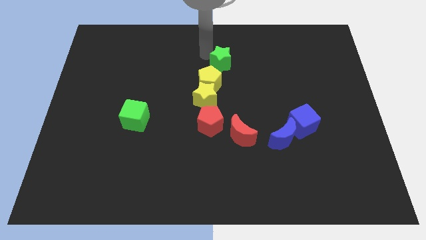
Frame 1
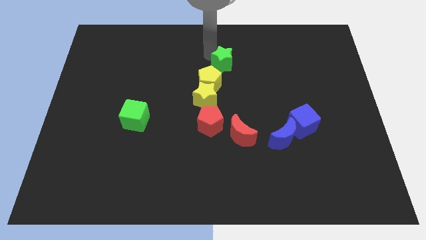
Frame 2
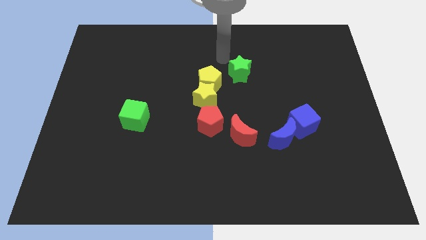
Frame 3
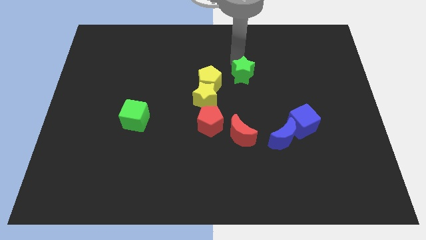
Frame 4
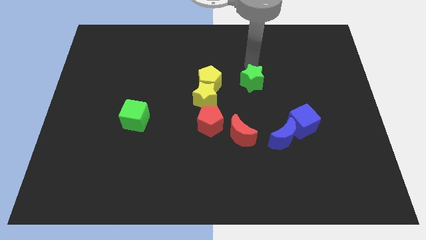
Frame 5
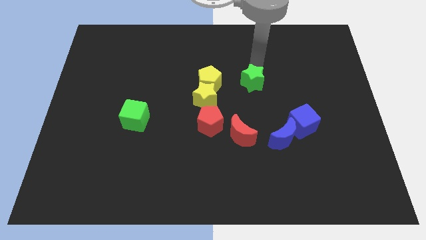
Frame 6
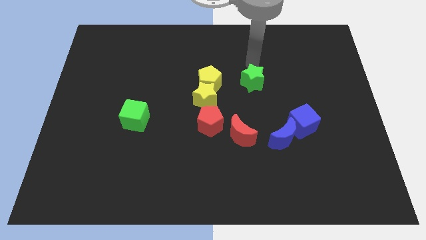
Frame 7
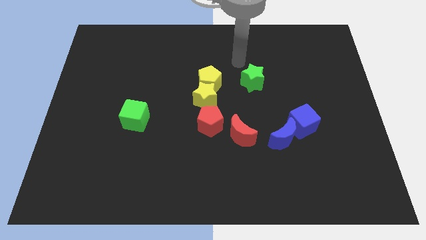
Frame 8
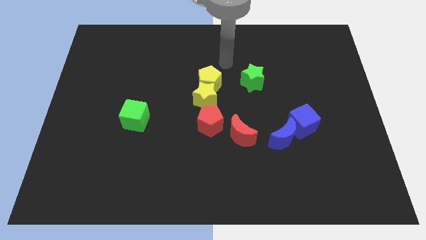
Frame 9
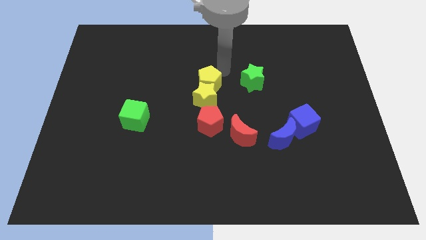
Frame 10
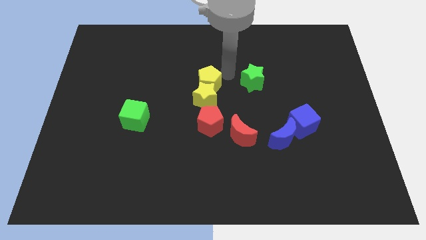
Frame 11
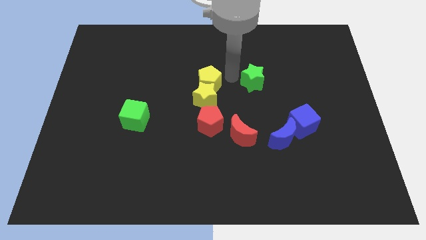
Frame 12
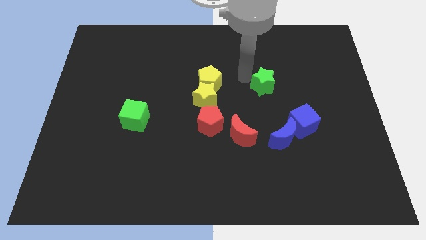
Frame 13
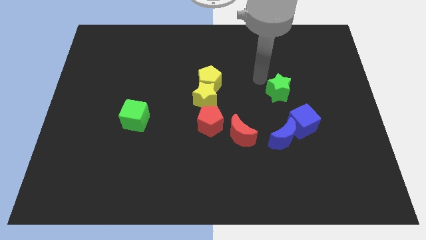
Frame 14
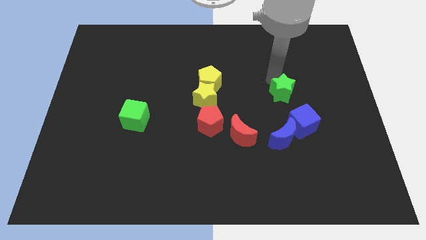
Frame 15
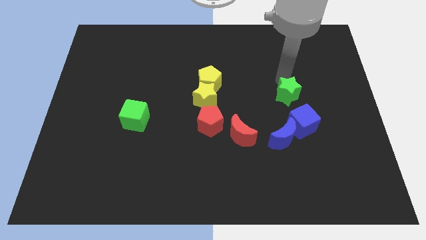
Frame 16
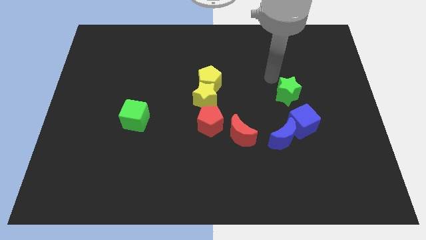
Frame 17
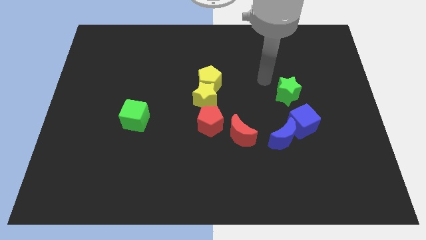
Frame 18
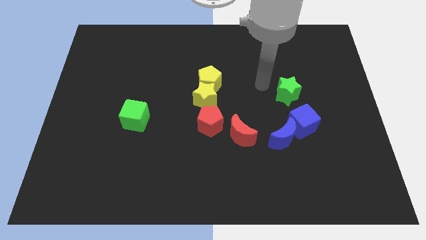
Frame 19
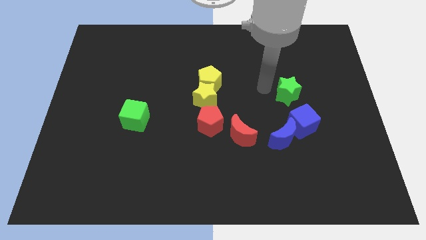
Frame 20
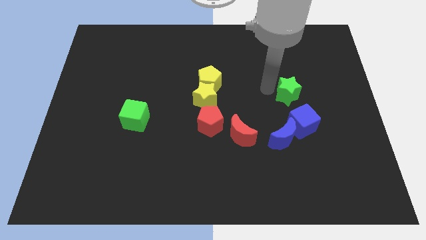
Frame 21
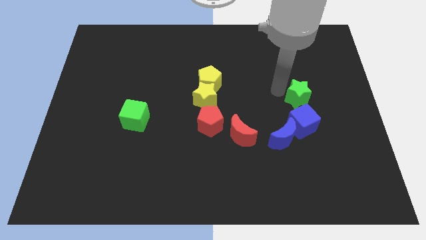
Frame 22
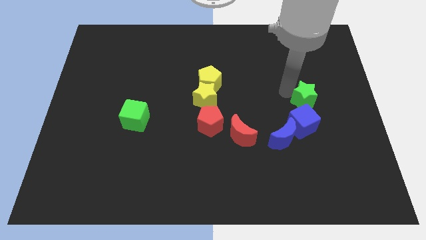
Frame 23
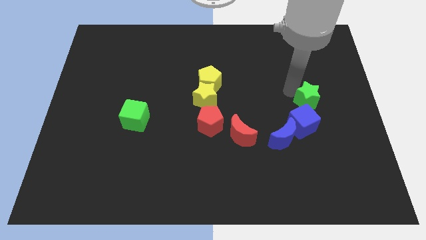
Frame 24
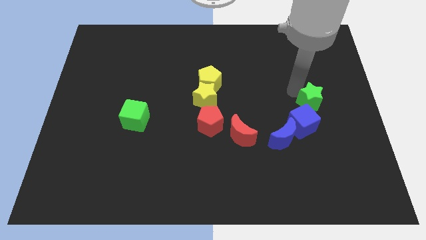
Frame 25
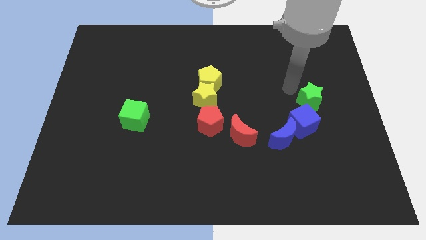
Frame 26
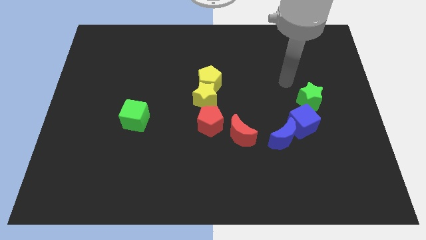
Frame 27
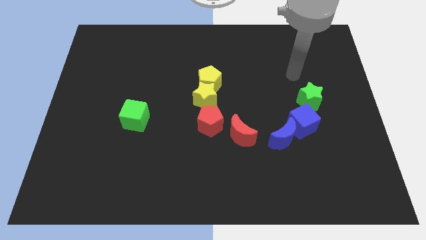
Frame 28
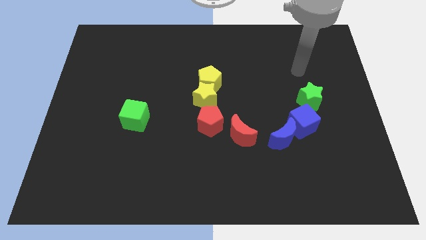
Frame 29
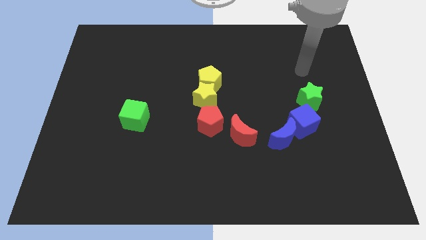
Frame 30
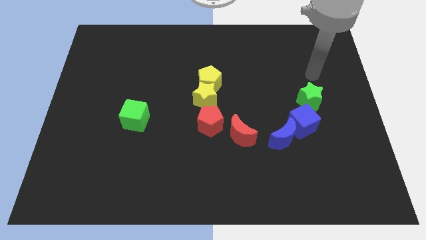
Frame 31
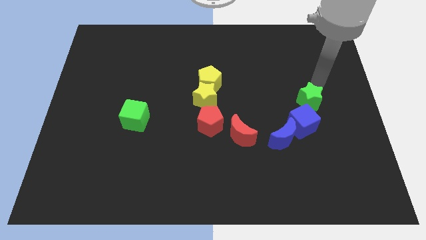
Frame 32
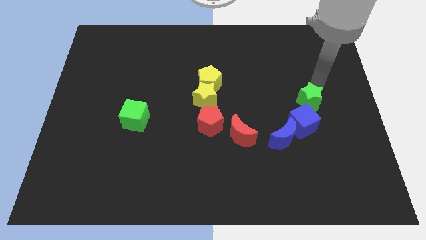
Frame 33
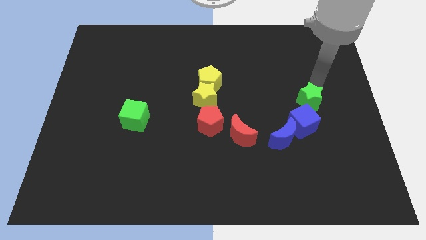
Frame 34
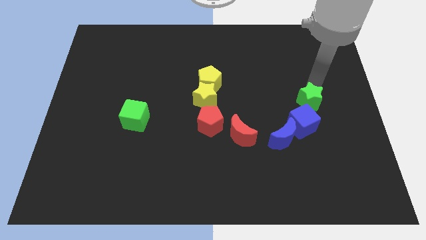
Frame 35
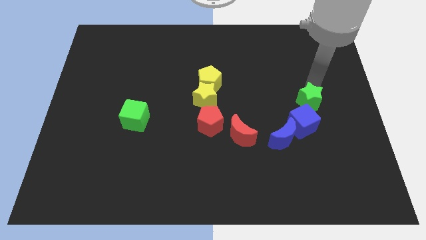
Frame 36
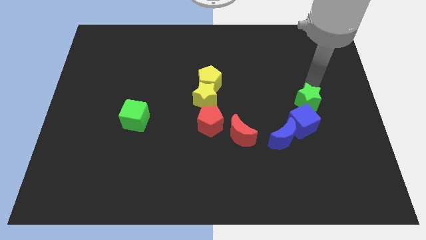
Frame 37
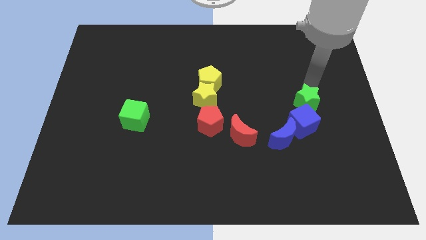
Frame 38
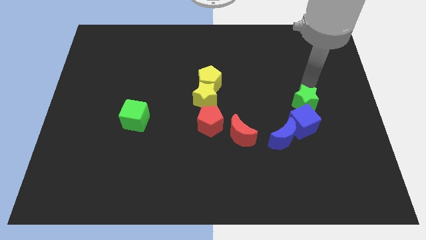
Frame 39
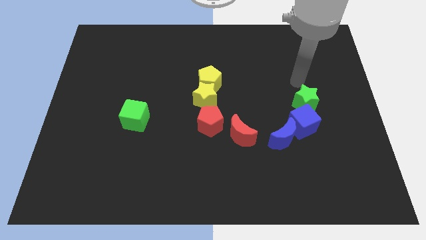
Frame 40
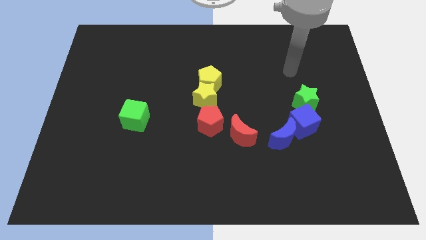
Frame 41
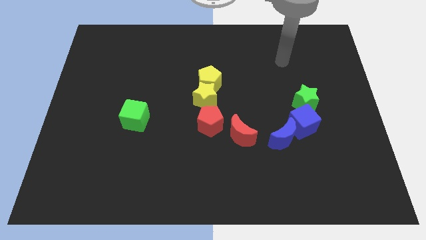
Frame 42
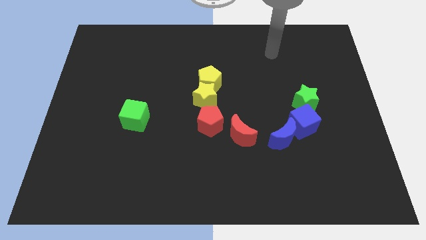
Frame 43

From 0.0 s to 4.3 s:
move the green star to the top of the blue cube

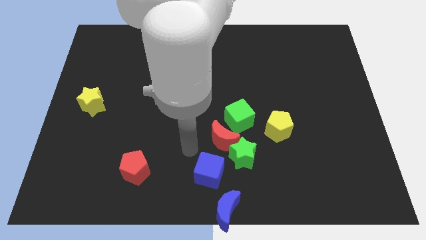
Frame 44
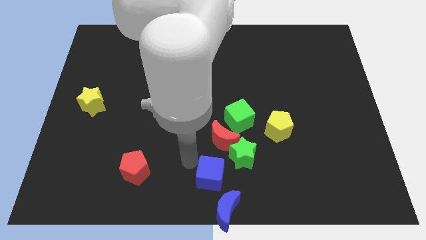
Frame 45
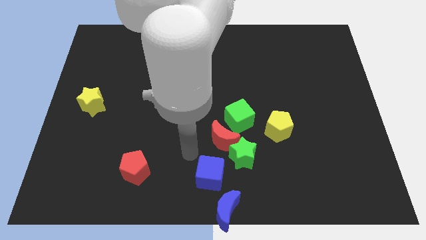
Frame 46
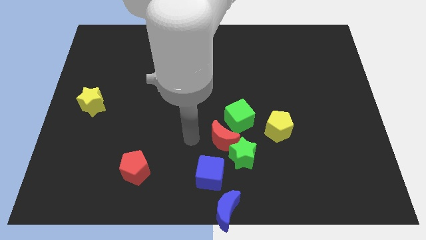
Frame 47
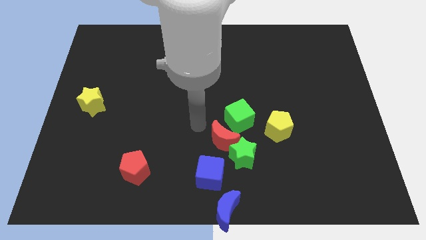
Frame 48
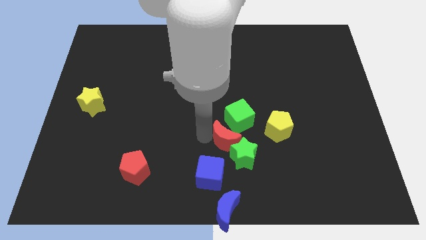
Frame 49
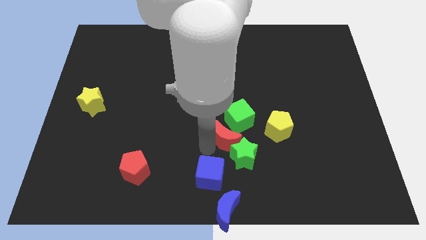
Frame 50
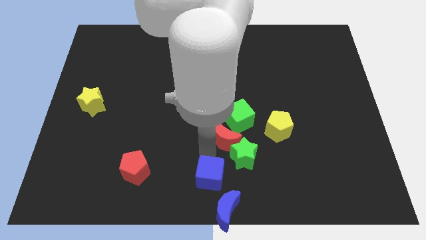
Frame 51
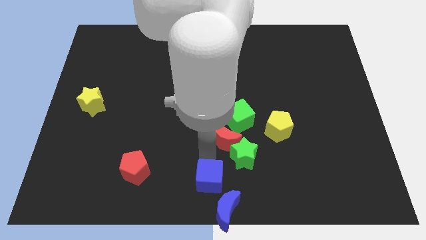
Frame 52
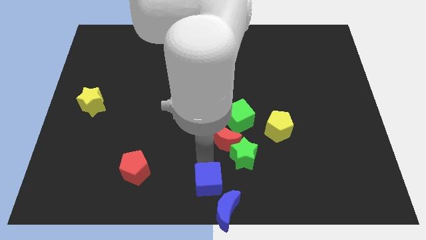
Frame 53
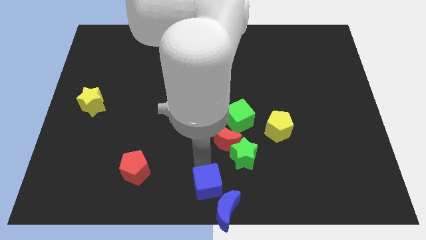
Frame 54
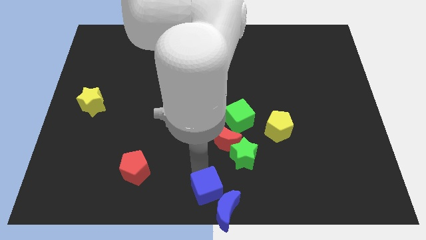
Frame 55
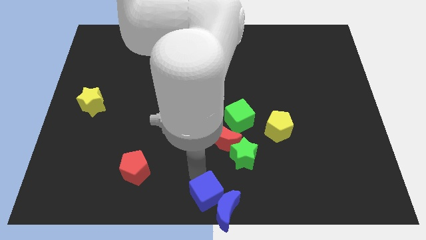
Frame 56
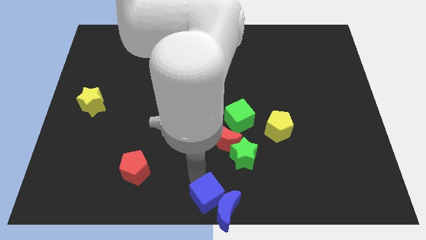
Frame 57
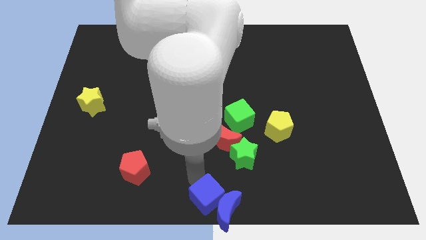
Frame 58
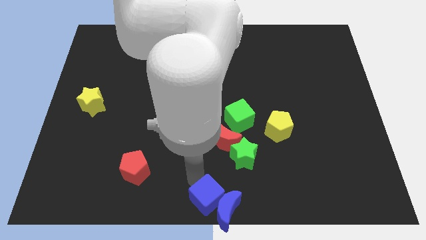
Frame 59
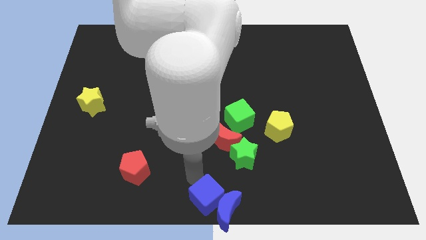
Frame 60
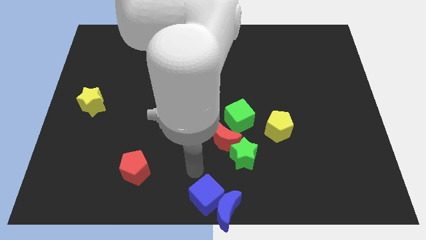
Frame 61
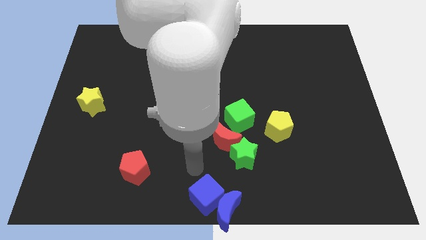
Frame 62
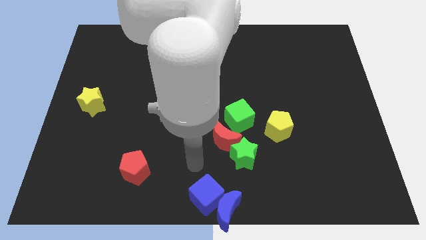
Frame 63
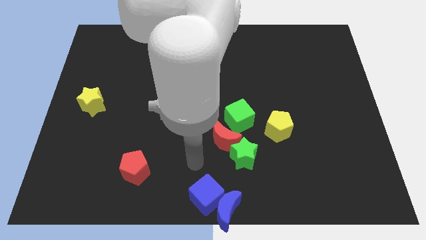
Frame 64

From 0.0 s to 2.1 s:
push blue cube into blue moon

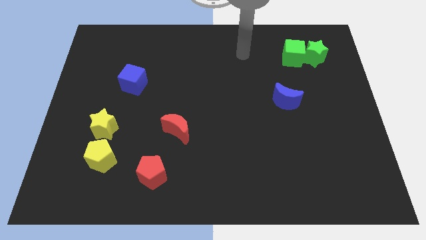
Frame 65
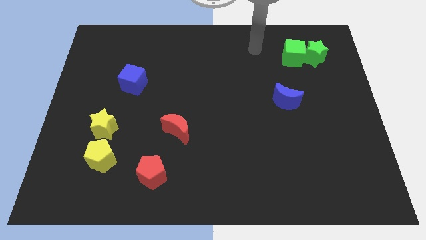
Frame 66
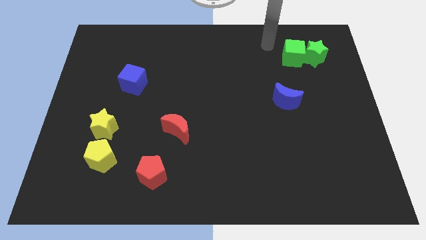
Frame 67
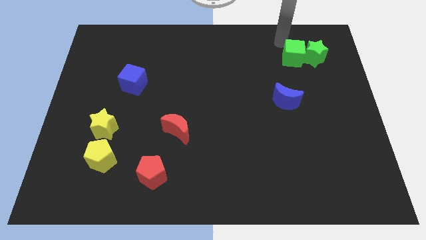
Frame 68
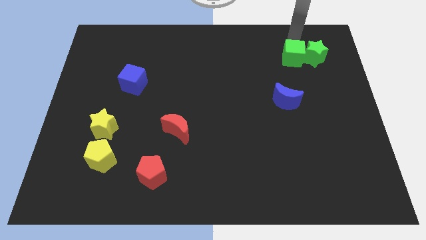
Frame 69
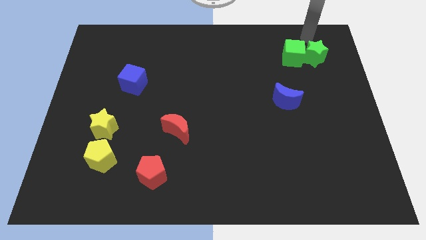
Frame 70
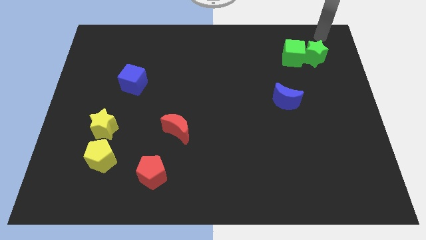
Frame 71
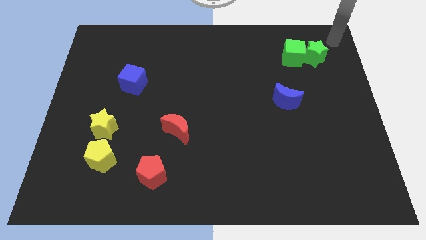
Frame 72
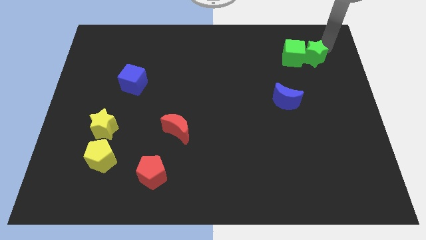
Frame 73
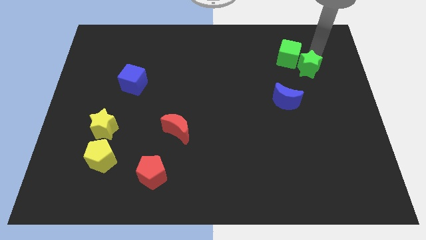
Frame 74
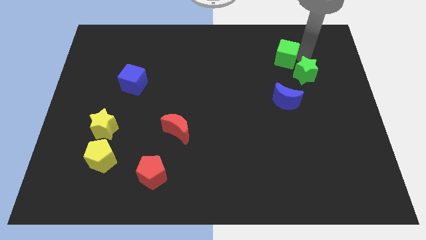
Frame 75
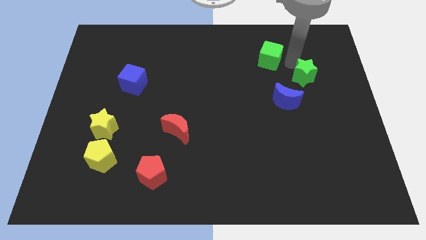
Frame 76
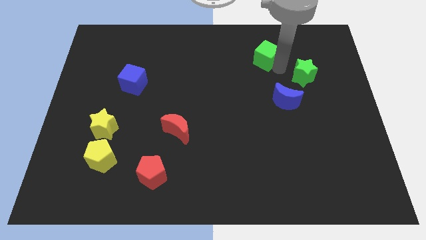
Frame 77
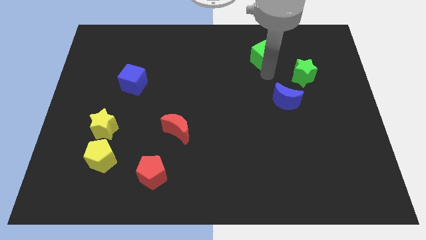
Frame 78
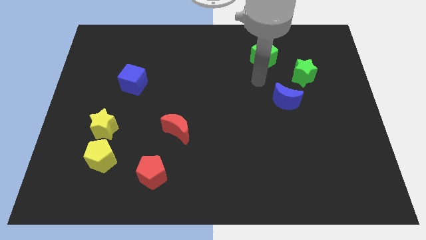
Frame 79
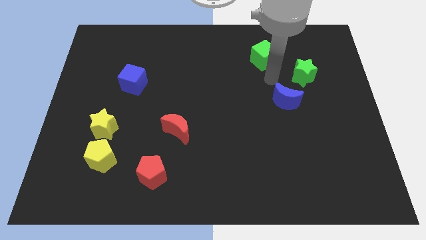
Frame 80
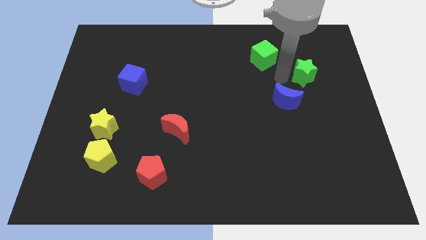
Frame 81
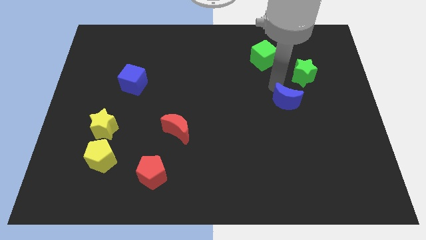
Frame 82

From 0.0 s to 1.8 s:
move the green blocks diagonal to each other

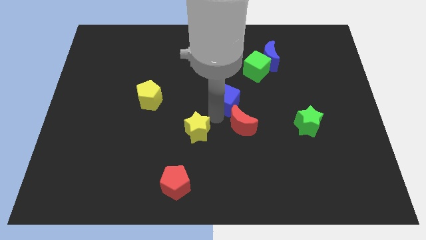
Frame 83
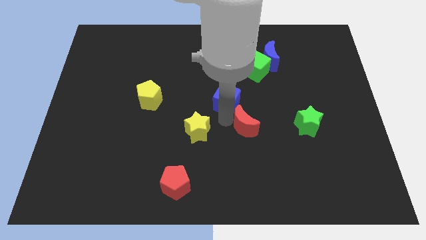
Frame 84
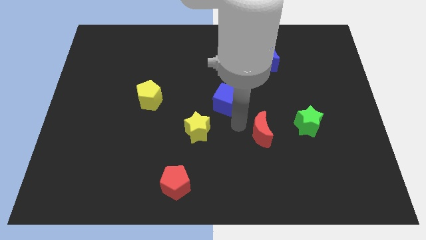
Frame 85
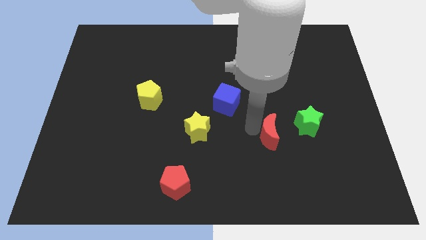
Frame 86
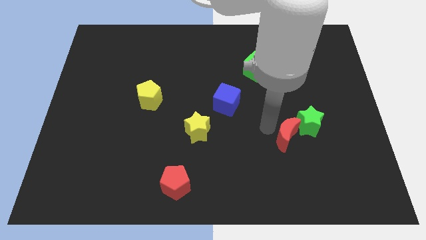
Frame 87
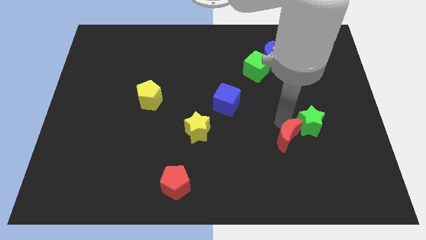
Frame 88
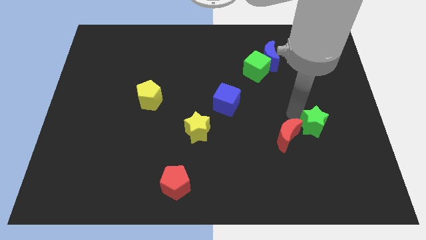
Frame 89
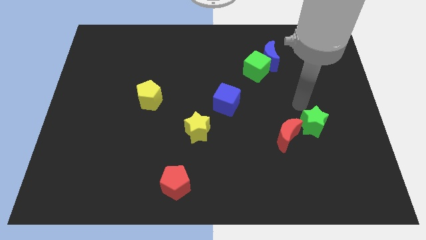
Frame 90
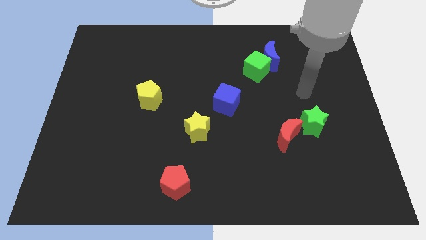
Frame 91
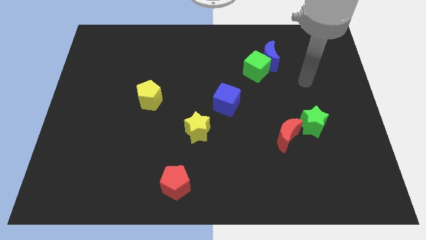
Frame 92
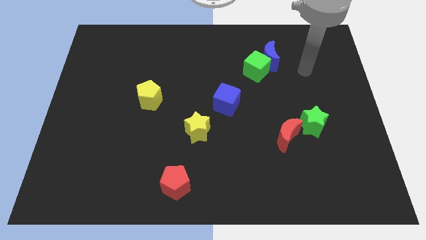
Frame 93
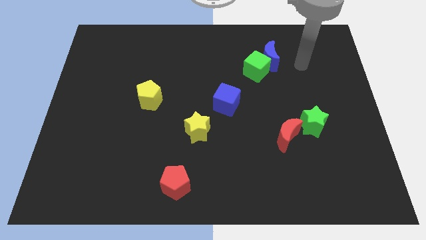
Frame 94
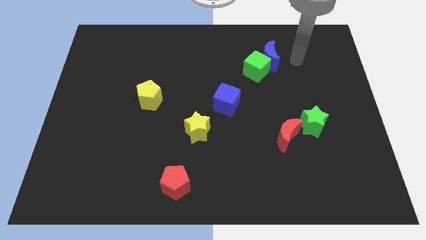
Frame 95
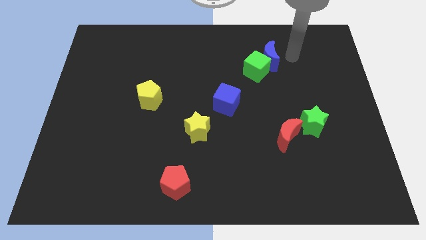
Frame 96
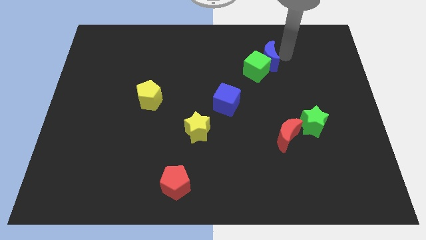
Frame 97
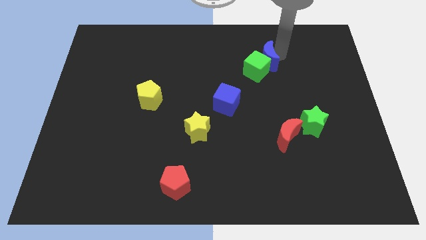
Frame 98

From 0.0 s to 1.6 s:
separate the red moon from the blue cube
